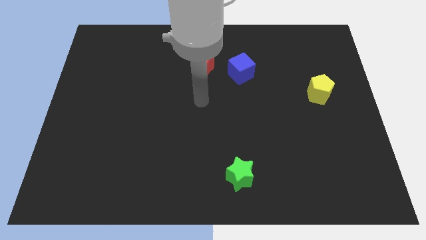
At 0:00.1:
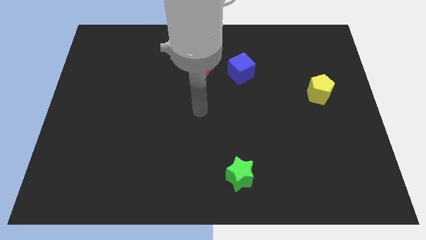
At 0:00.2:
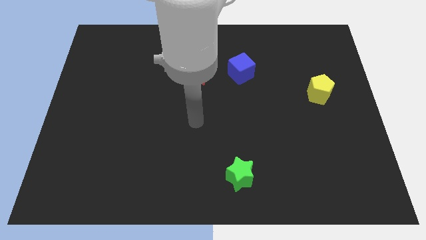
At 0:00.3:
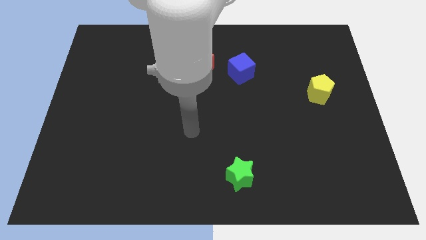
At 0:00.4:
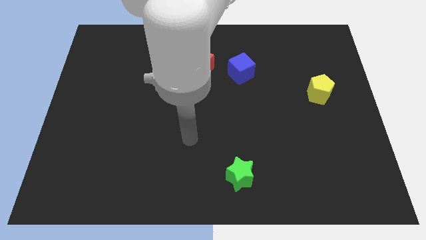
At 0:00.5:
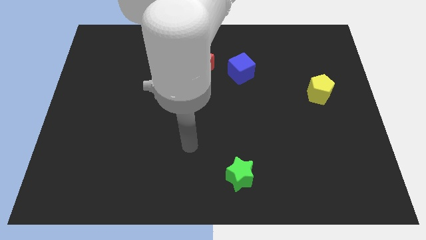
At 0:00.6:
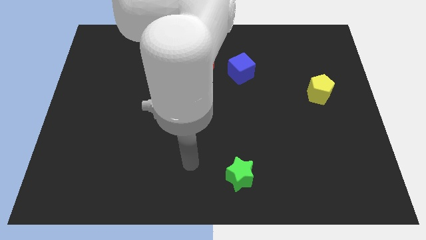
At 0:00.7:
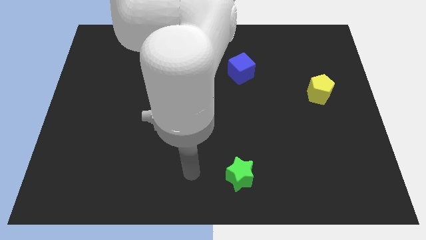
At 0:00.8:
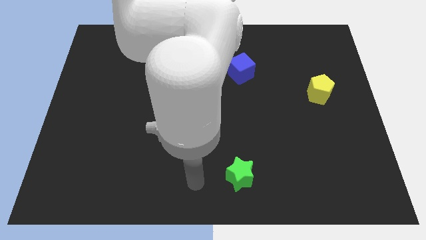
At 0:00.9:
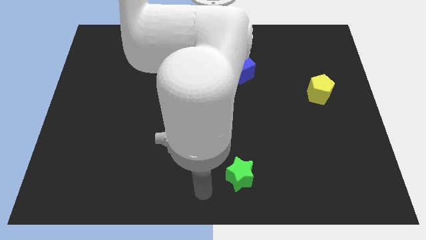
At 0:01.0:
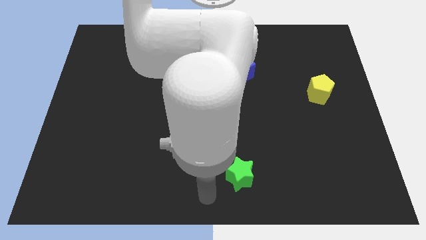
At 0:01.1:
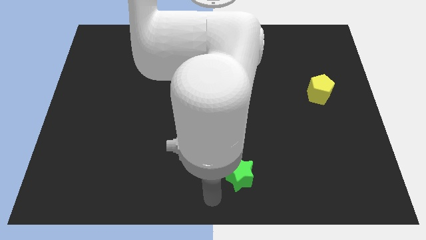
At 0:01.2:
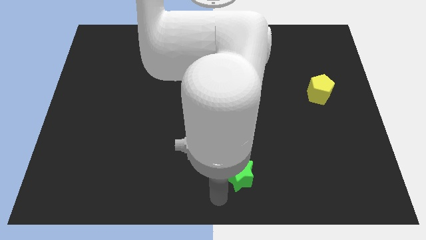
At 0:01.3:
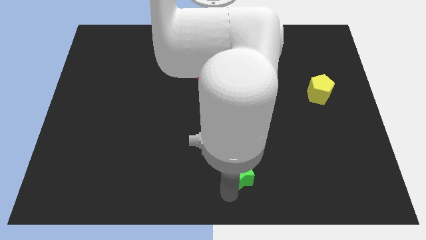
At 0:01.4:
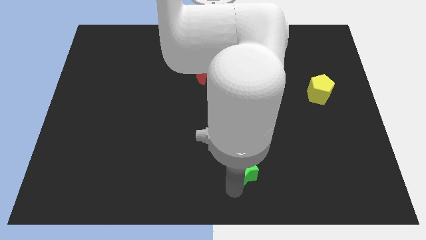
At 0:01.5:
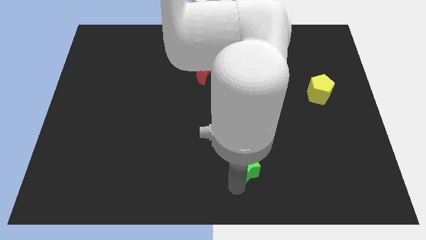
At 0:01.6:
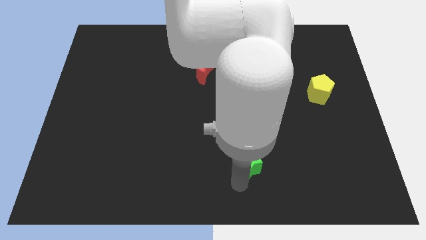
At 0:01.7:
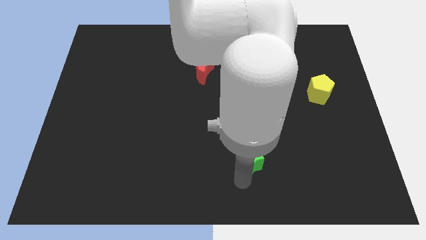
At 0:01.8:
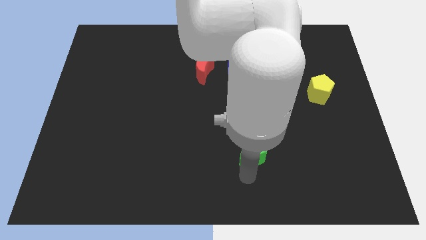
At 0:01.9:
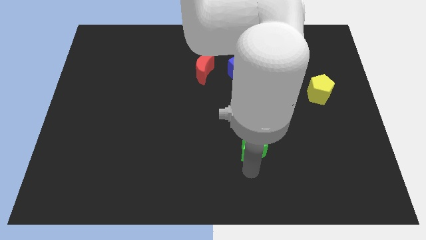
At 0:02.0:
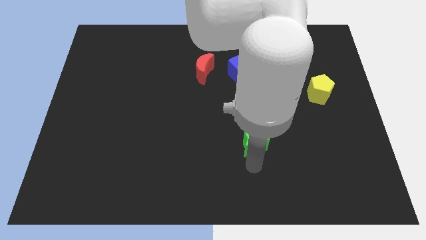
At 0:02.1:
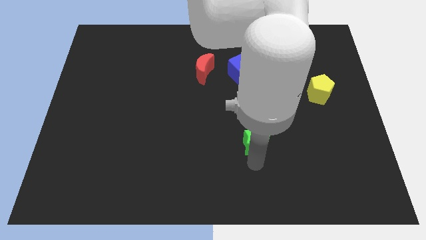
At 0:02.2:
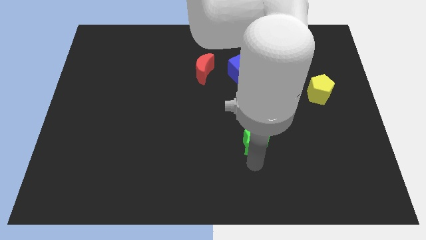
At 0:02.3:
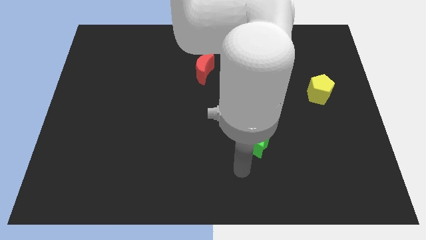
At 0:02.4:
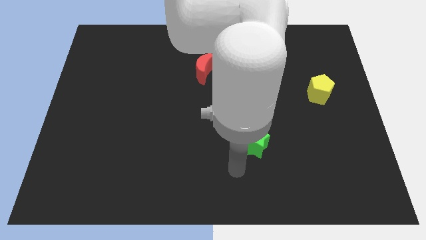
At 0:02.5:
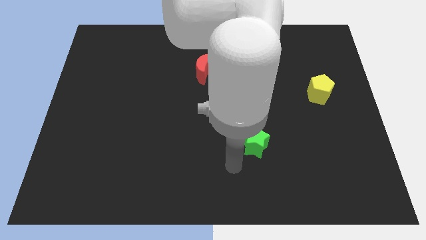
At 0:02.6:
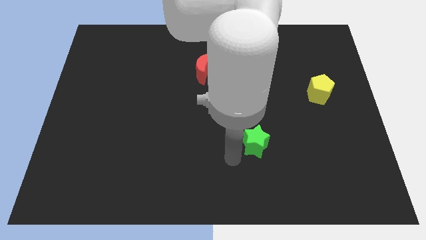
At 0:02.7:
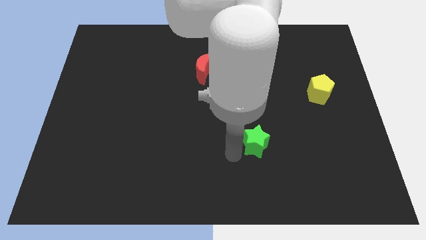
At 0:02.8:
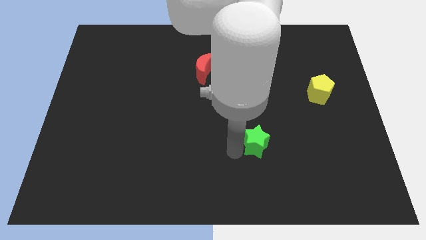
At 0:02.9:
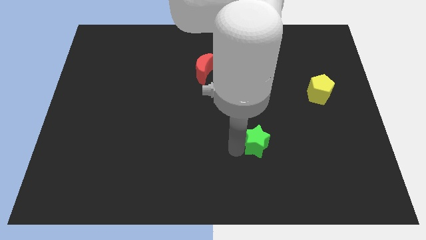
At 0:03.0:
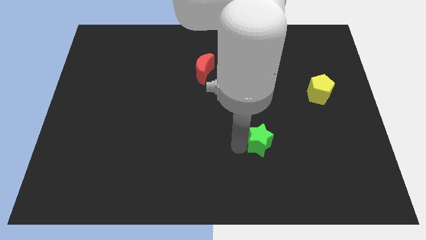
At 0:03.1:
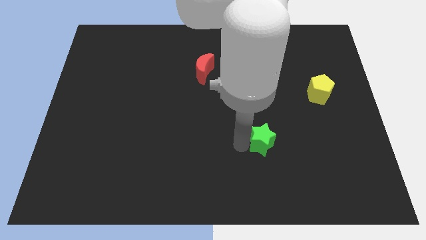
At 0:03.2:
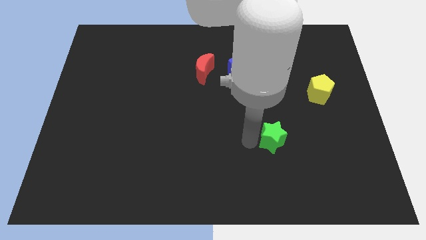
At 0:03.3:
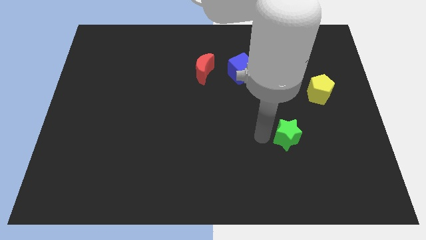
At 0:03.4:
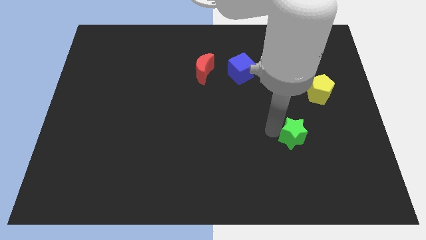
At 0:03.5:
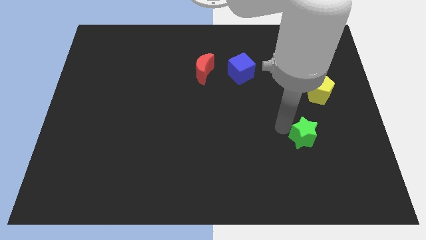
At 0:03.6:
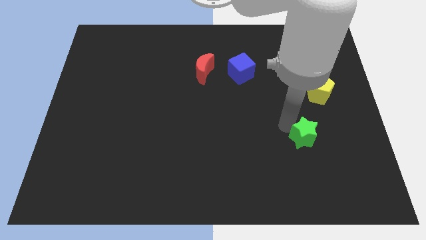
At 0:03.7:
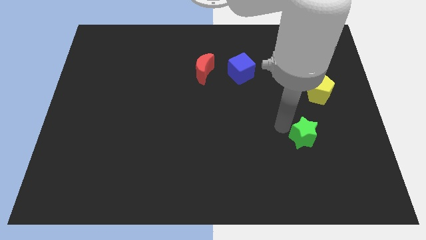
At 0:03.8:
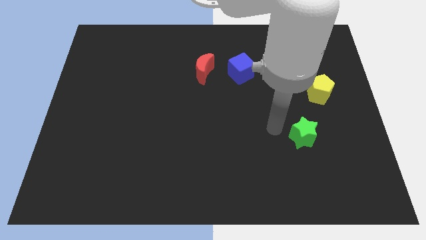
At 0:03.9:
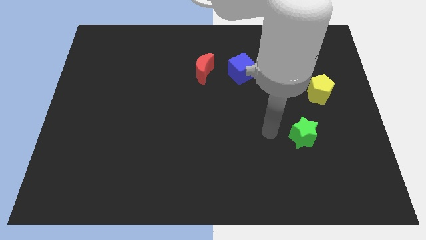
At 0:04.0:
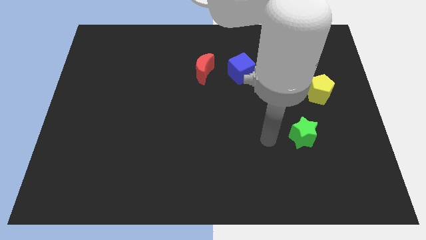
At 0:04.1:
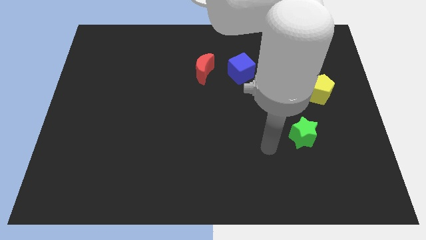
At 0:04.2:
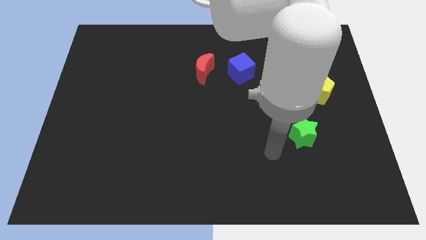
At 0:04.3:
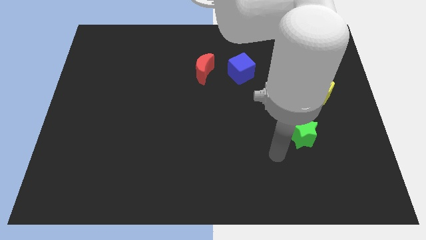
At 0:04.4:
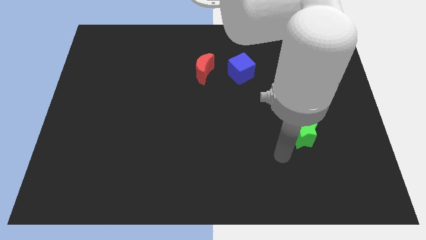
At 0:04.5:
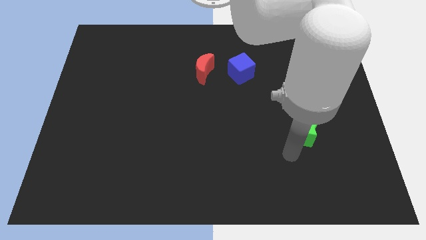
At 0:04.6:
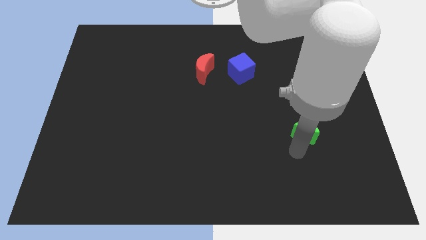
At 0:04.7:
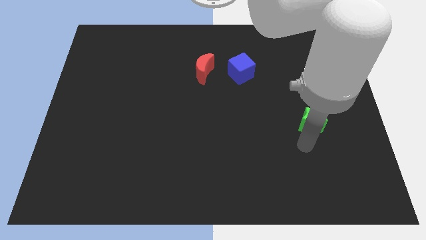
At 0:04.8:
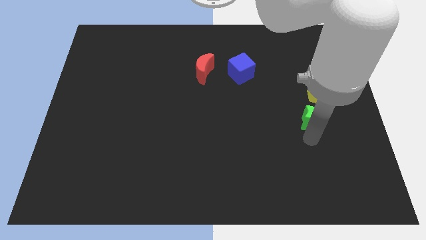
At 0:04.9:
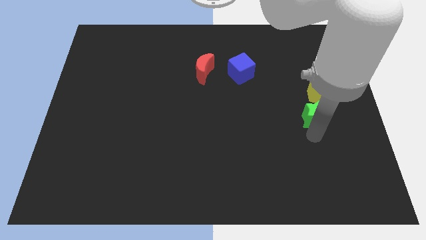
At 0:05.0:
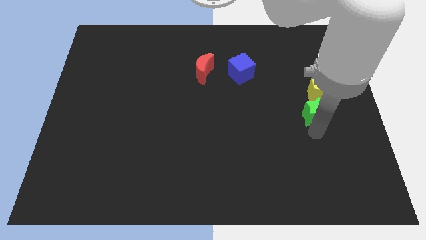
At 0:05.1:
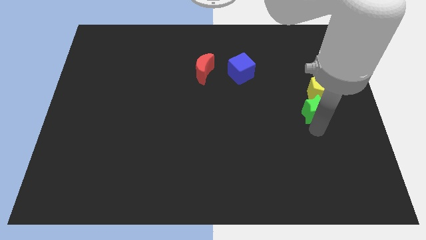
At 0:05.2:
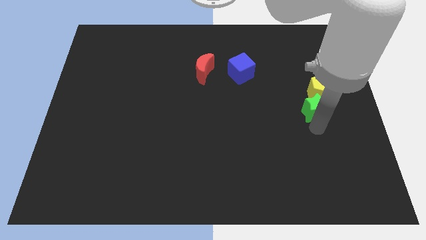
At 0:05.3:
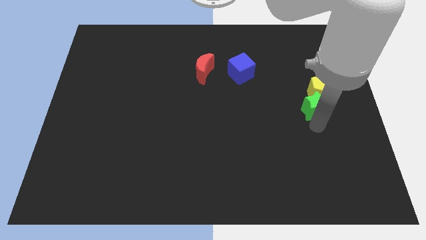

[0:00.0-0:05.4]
move the star towards the yellow block

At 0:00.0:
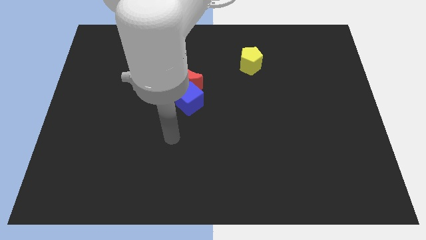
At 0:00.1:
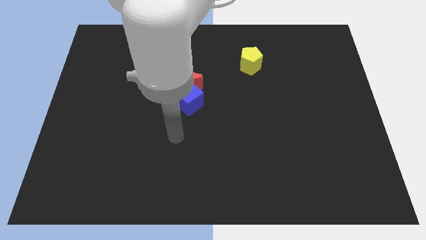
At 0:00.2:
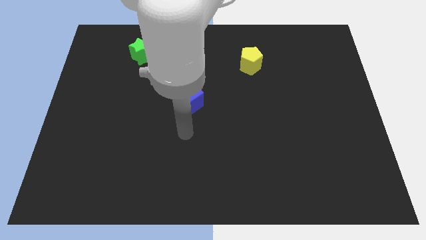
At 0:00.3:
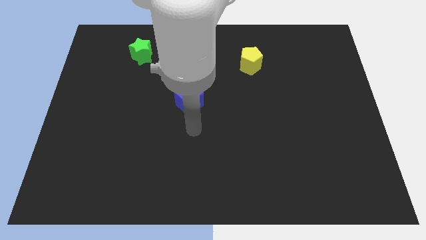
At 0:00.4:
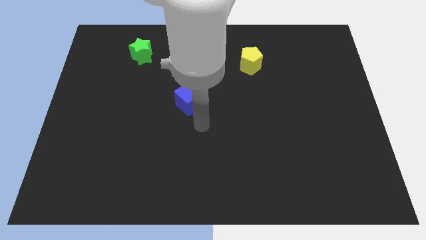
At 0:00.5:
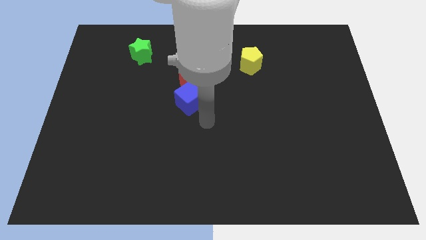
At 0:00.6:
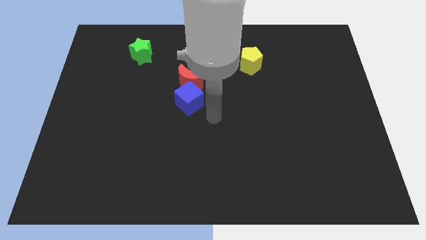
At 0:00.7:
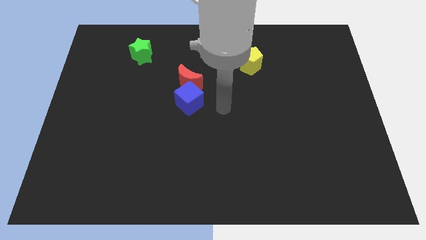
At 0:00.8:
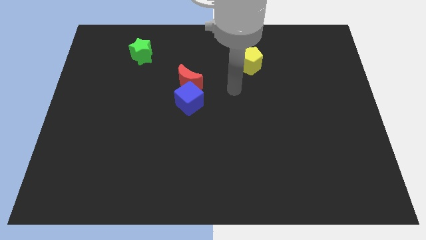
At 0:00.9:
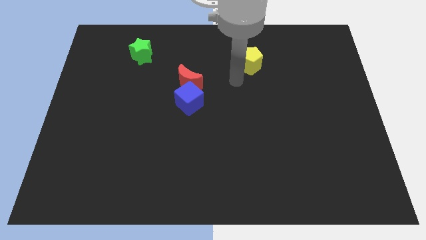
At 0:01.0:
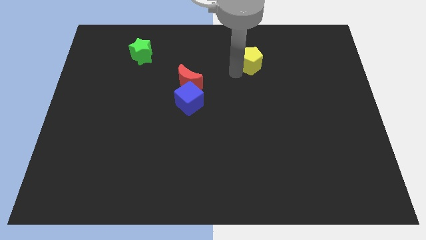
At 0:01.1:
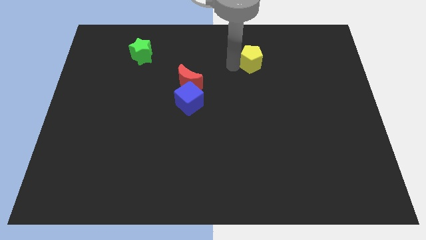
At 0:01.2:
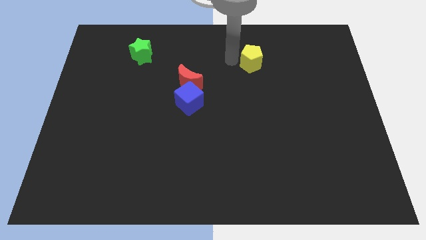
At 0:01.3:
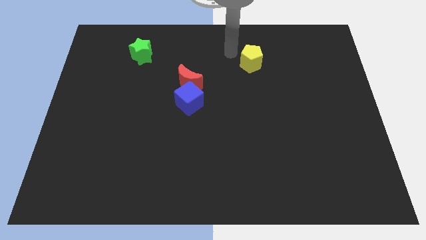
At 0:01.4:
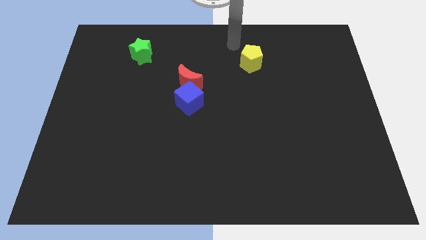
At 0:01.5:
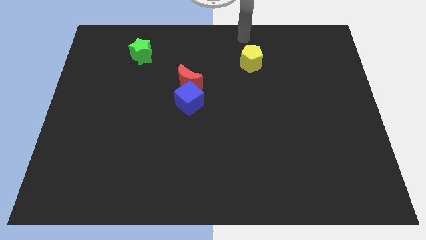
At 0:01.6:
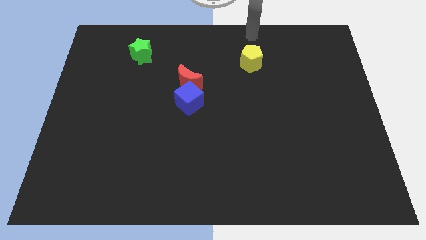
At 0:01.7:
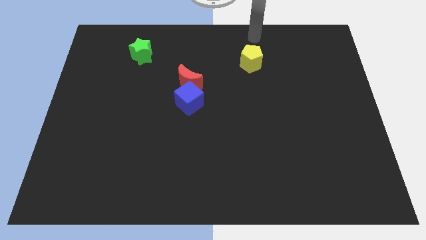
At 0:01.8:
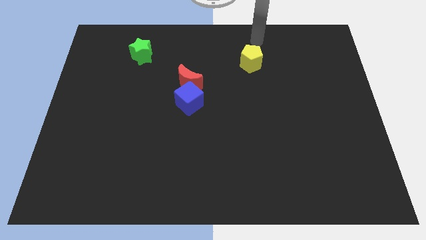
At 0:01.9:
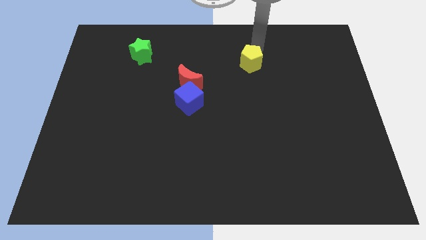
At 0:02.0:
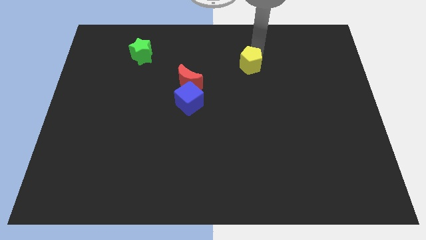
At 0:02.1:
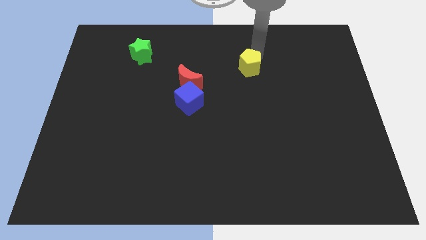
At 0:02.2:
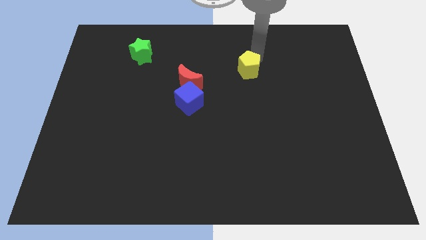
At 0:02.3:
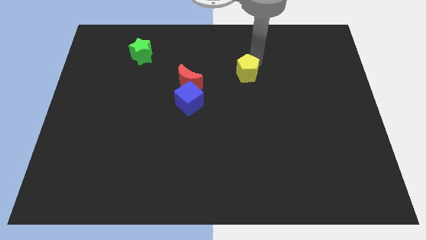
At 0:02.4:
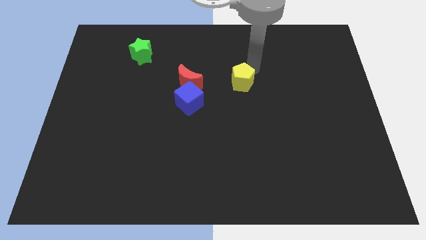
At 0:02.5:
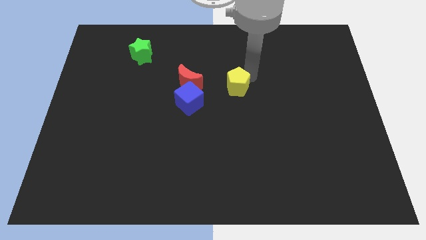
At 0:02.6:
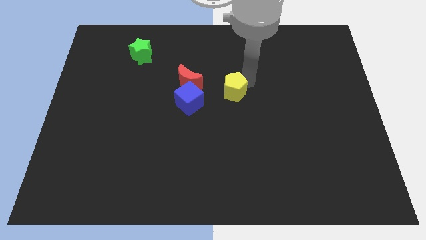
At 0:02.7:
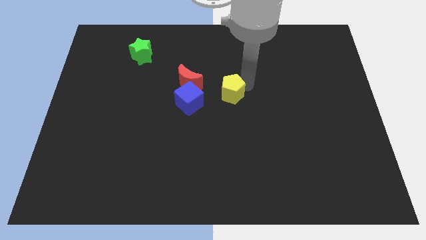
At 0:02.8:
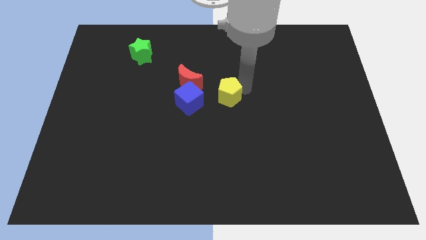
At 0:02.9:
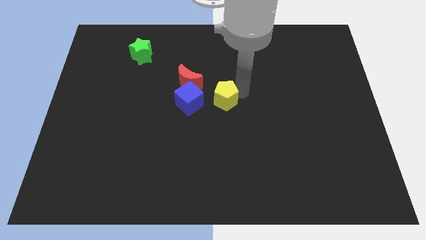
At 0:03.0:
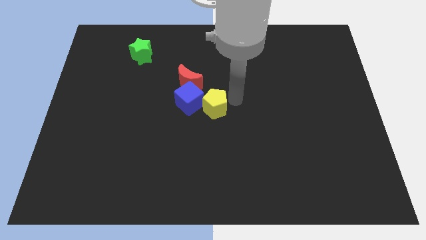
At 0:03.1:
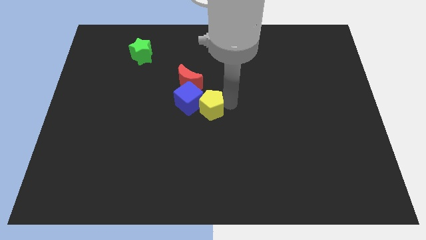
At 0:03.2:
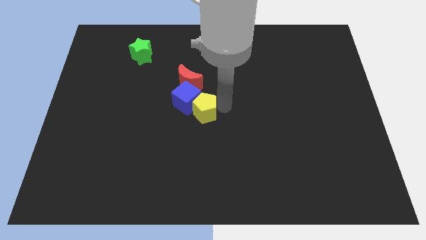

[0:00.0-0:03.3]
push the pentagon next to the blue block
